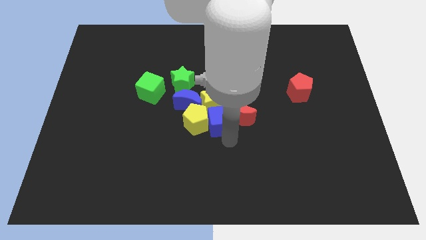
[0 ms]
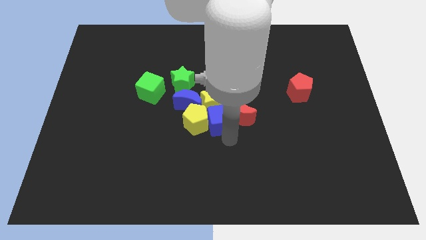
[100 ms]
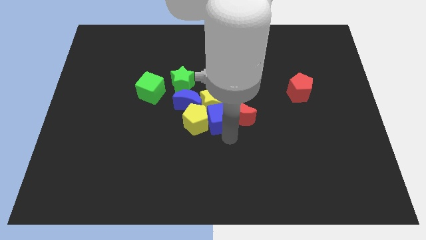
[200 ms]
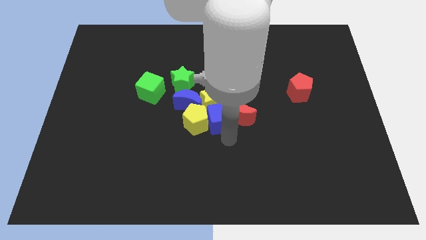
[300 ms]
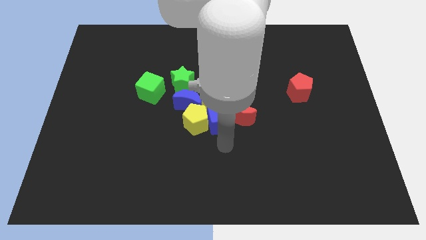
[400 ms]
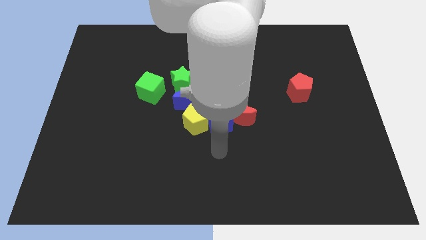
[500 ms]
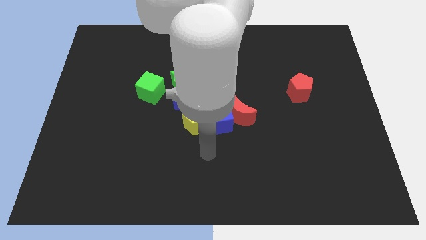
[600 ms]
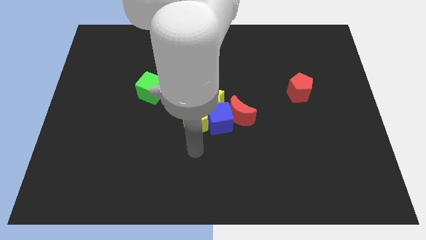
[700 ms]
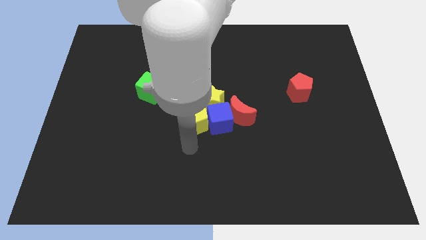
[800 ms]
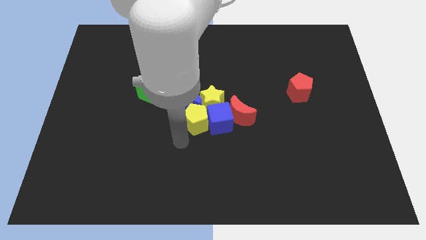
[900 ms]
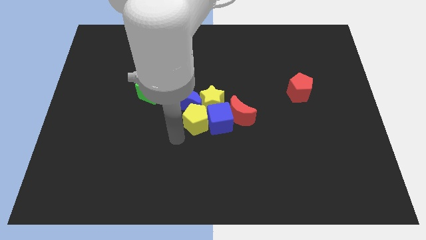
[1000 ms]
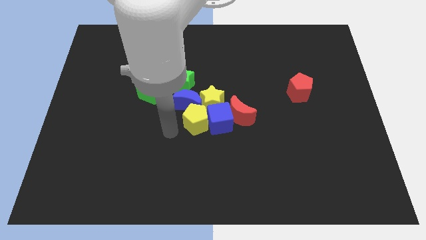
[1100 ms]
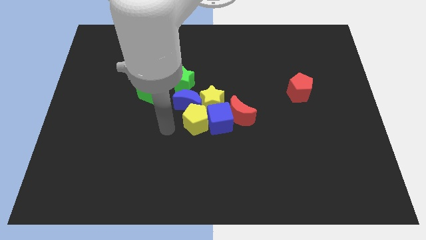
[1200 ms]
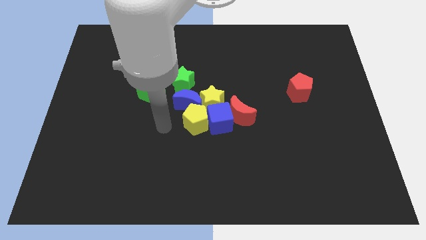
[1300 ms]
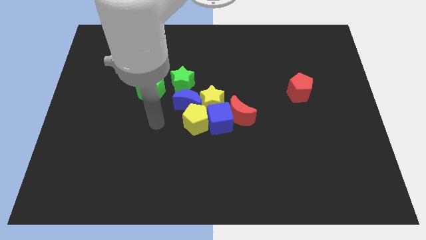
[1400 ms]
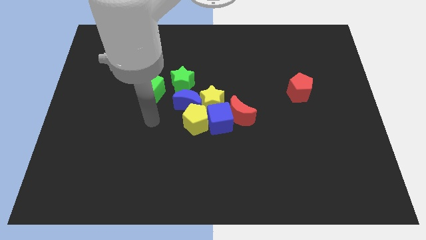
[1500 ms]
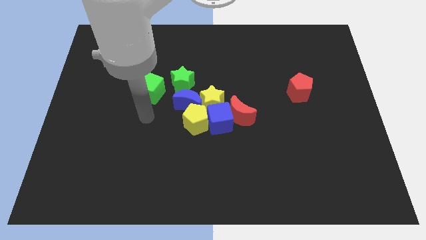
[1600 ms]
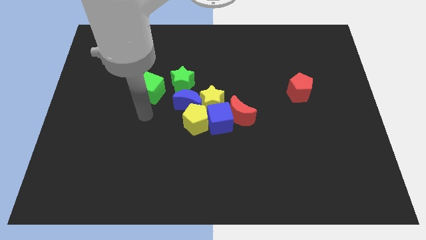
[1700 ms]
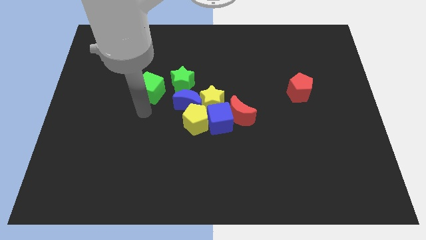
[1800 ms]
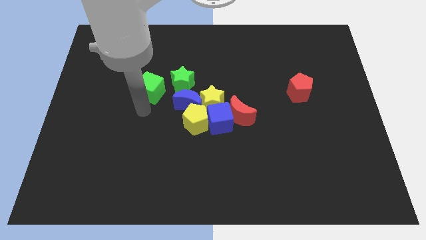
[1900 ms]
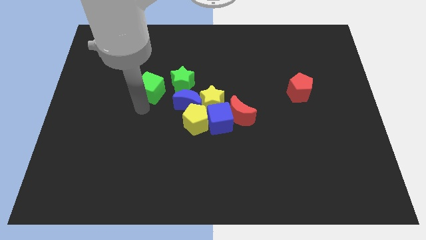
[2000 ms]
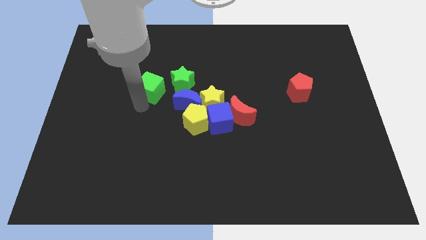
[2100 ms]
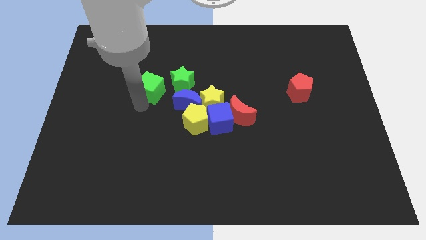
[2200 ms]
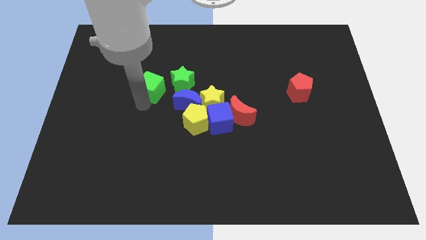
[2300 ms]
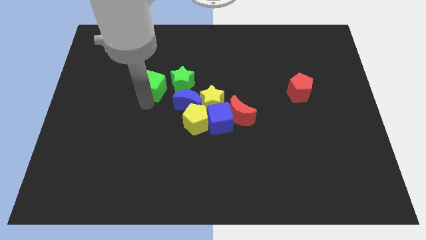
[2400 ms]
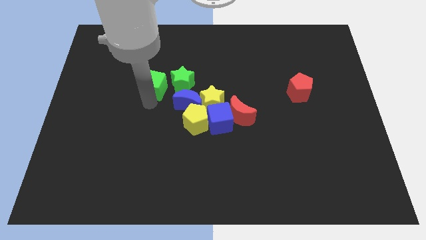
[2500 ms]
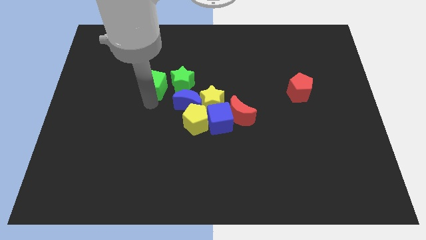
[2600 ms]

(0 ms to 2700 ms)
place the arm down to the green cube

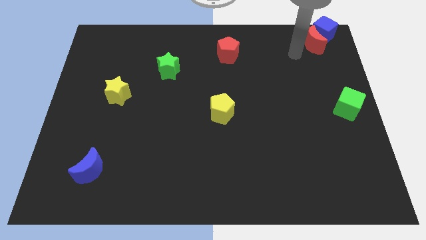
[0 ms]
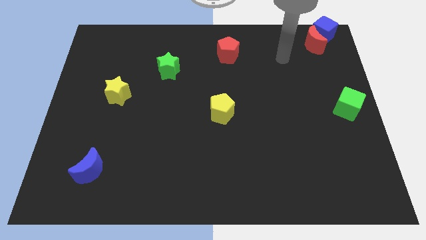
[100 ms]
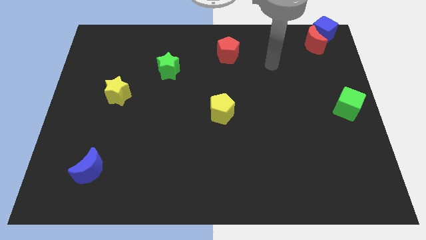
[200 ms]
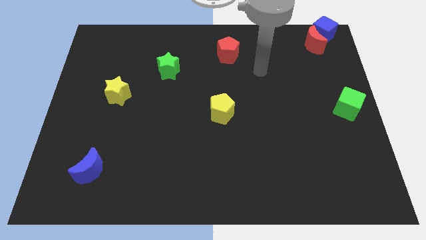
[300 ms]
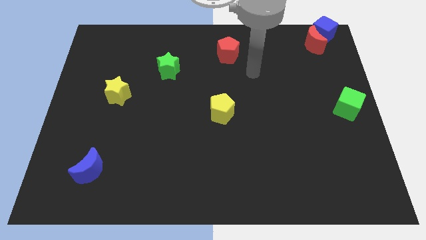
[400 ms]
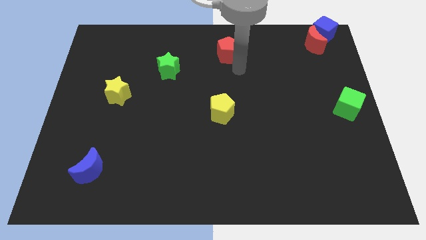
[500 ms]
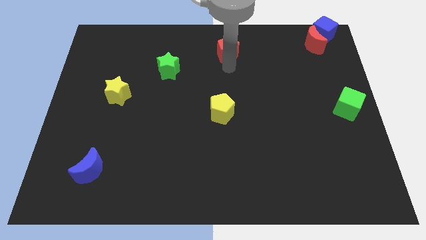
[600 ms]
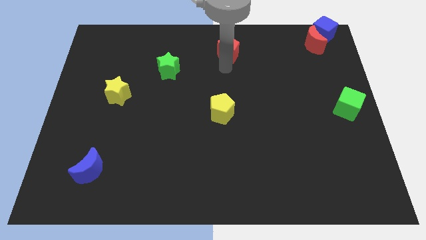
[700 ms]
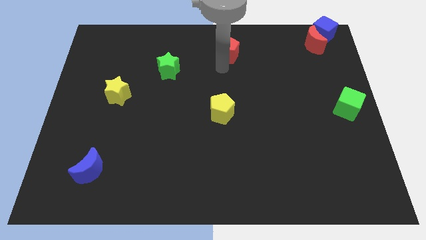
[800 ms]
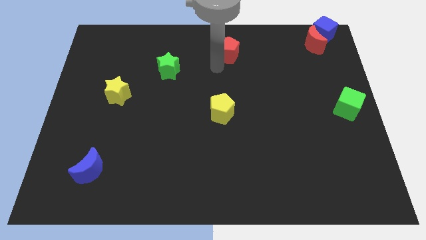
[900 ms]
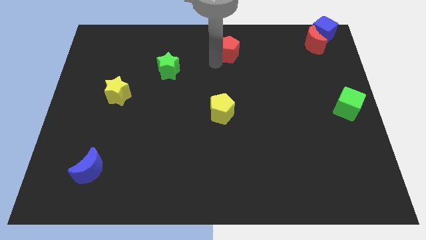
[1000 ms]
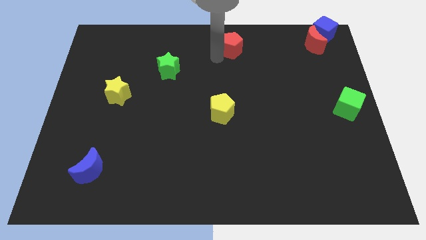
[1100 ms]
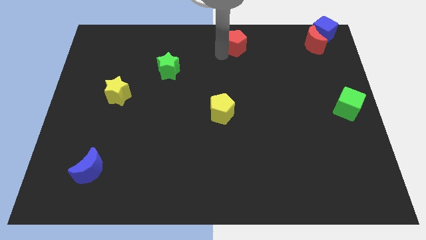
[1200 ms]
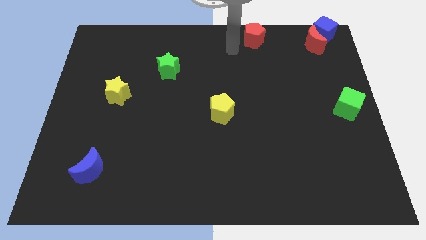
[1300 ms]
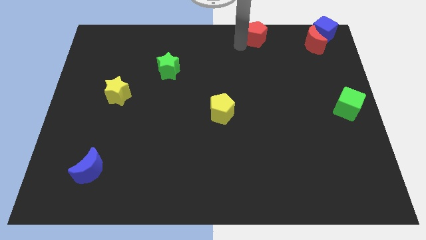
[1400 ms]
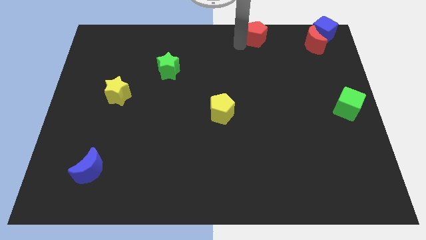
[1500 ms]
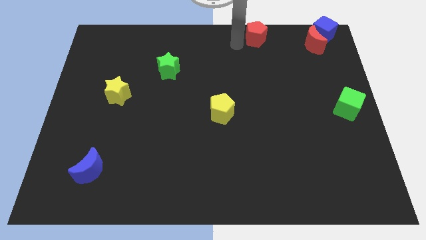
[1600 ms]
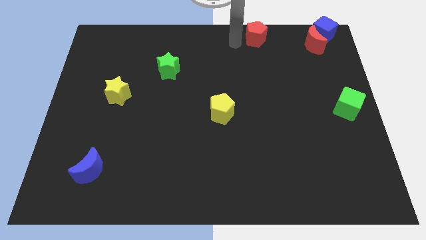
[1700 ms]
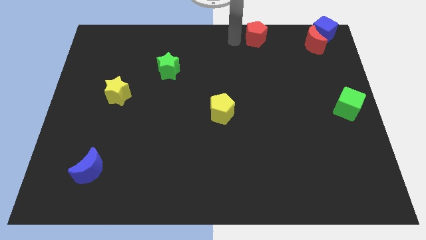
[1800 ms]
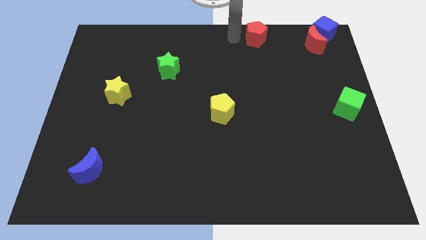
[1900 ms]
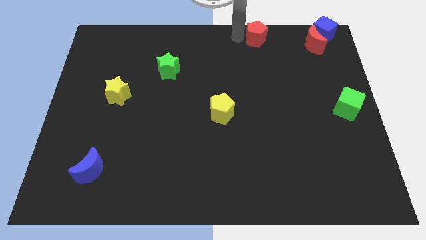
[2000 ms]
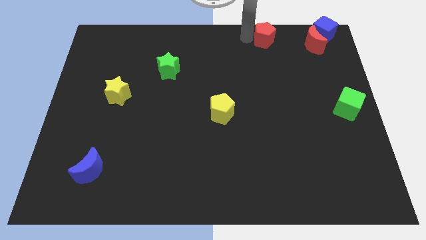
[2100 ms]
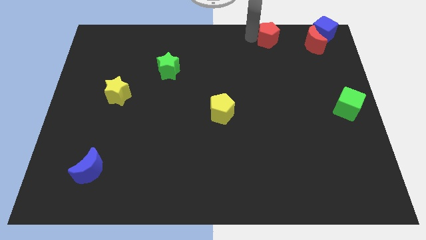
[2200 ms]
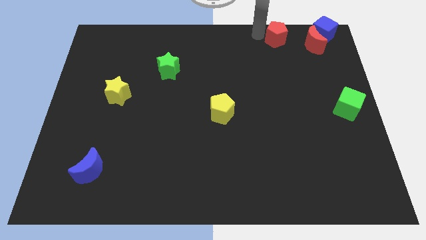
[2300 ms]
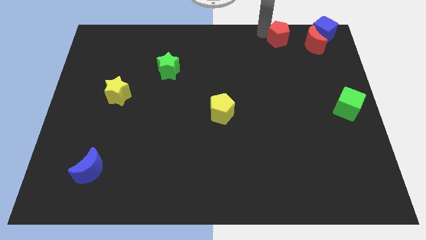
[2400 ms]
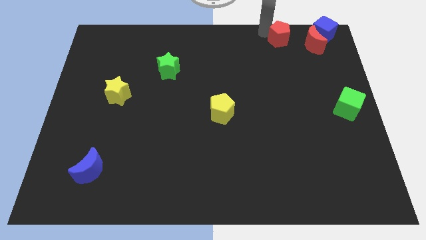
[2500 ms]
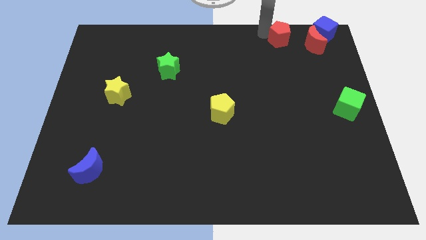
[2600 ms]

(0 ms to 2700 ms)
place the red pentagon left to the red moon

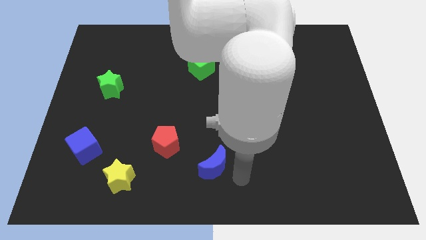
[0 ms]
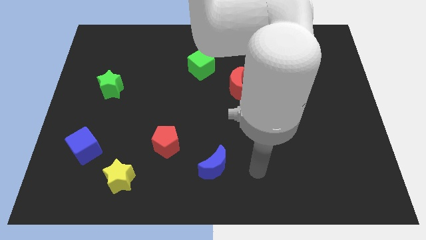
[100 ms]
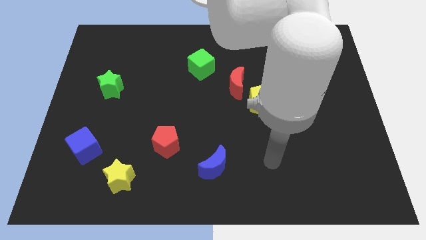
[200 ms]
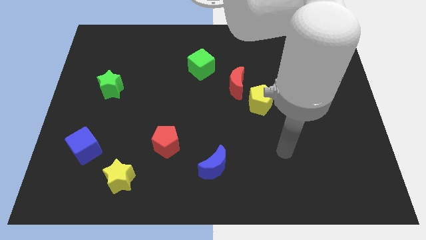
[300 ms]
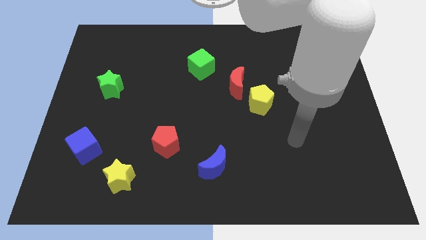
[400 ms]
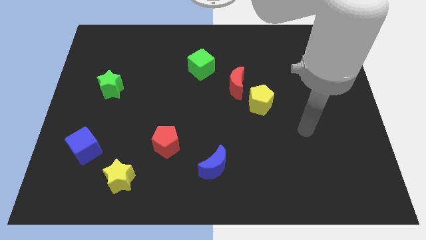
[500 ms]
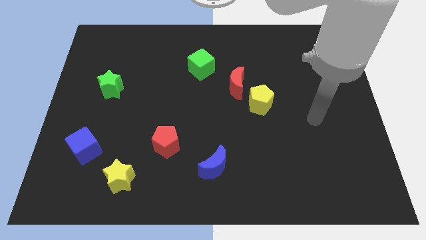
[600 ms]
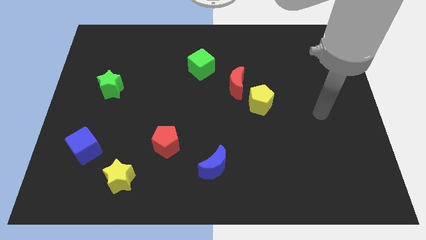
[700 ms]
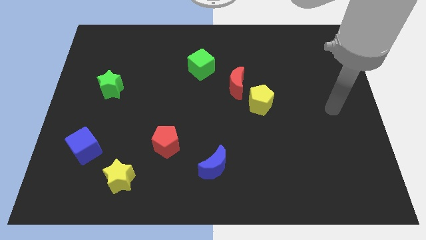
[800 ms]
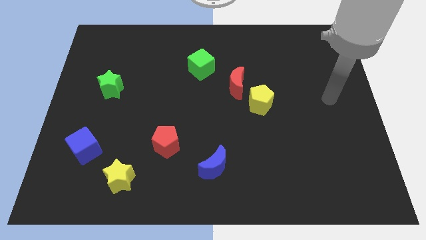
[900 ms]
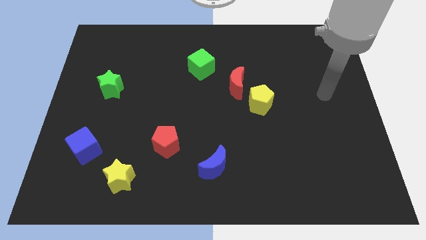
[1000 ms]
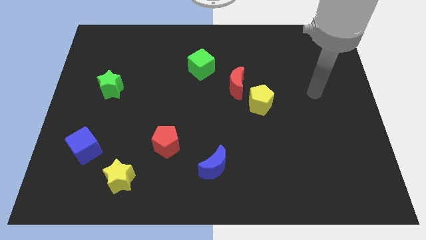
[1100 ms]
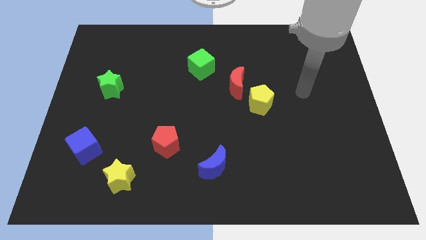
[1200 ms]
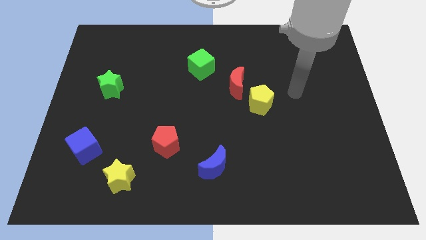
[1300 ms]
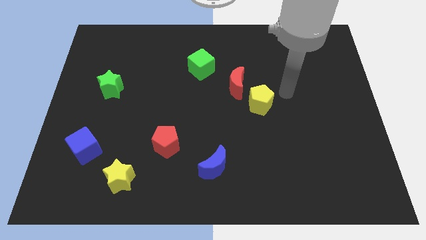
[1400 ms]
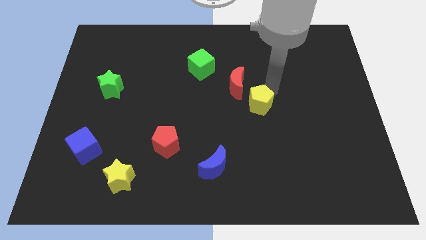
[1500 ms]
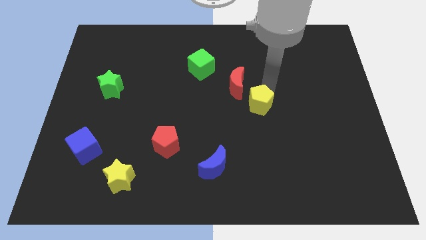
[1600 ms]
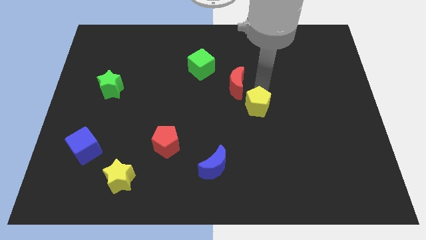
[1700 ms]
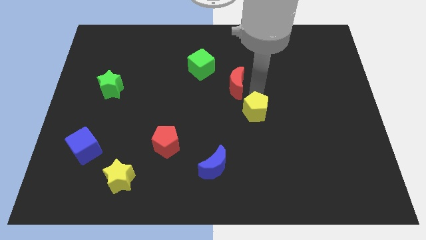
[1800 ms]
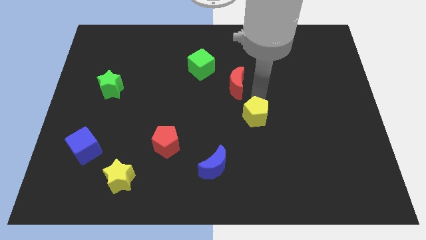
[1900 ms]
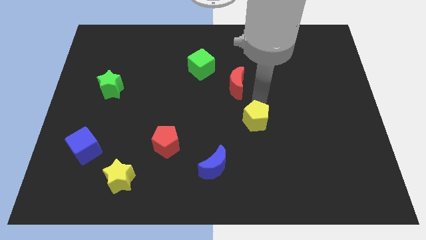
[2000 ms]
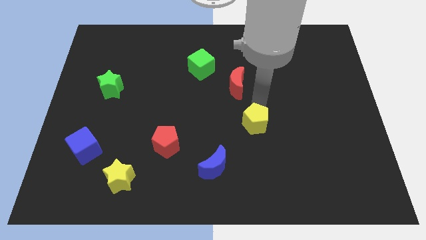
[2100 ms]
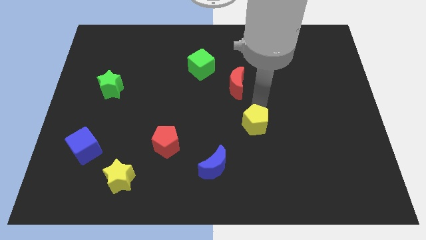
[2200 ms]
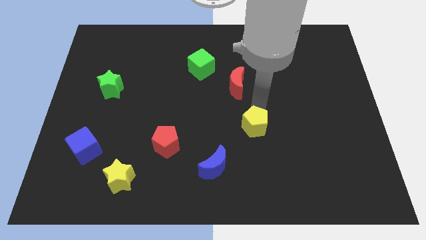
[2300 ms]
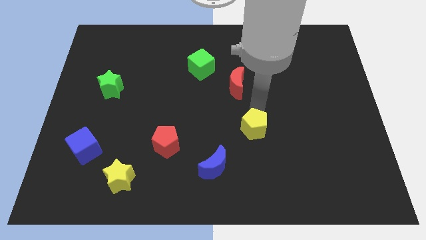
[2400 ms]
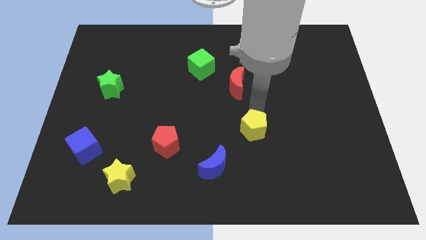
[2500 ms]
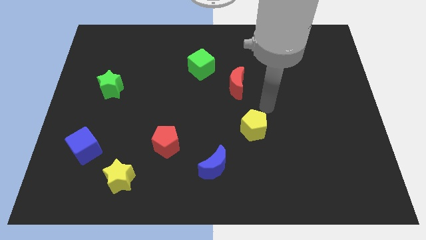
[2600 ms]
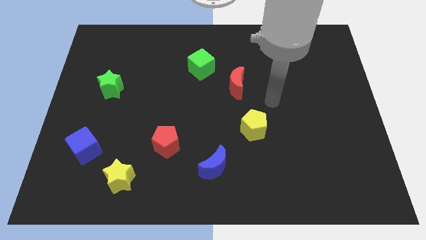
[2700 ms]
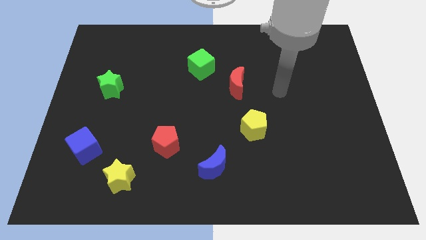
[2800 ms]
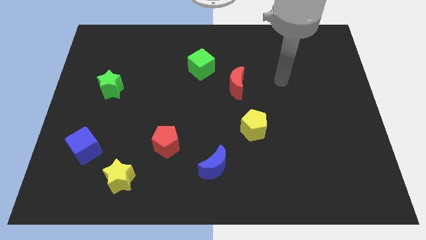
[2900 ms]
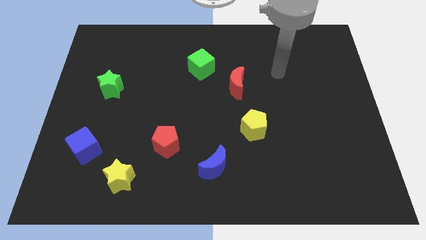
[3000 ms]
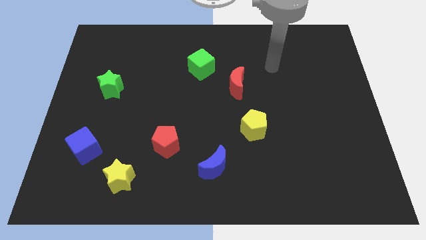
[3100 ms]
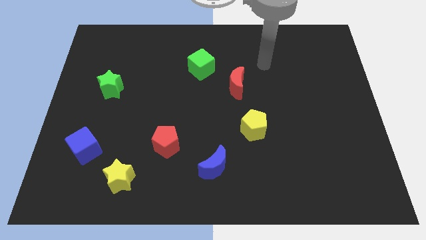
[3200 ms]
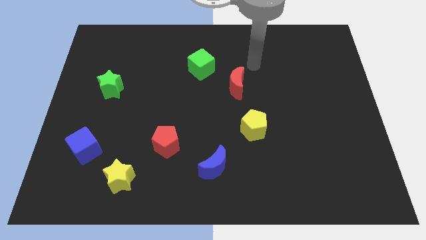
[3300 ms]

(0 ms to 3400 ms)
put the yellow pentagon diagonally above top right side of the blue crescent
